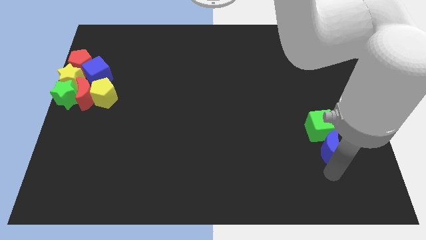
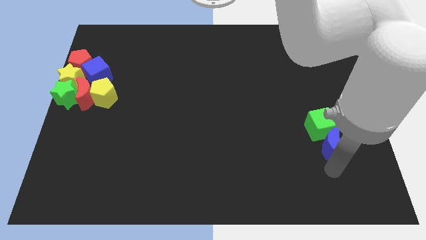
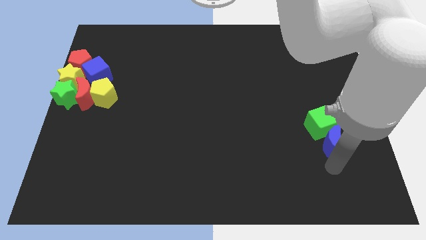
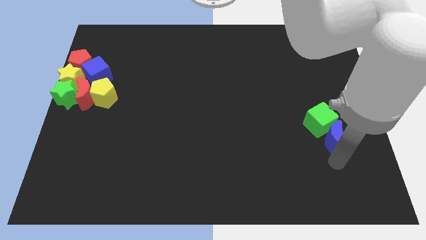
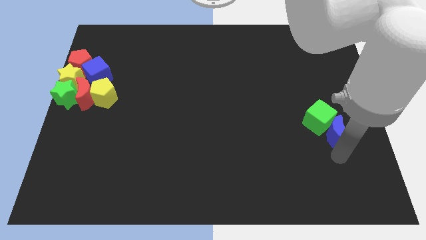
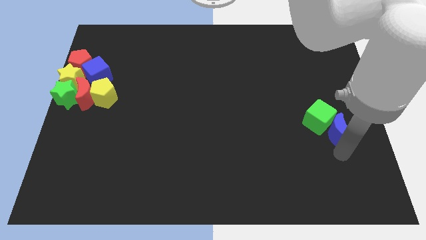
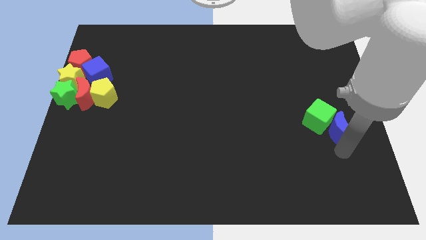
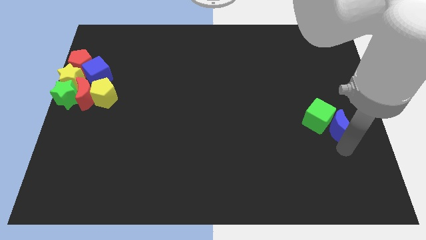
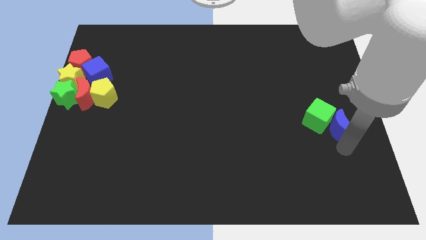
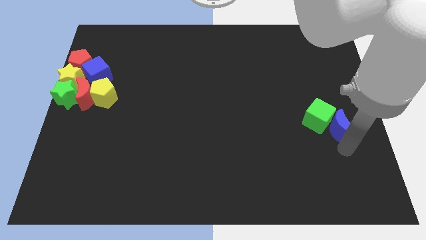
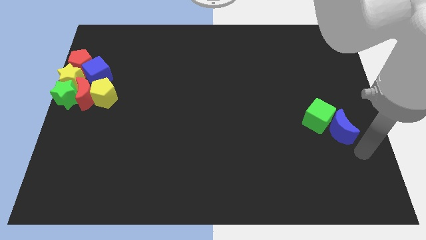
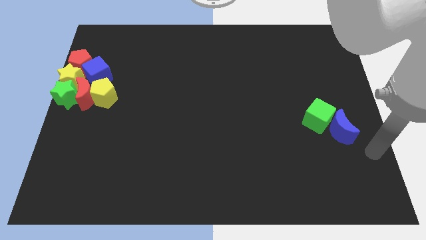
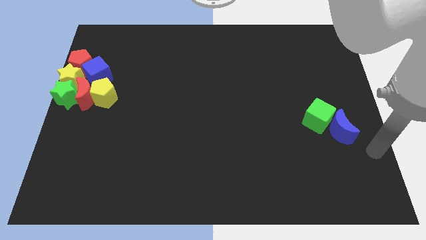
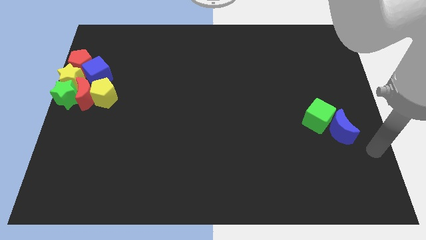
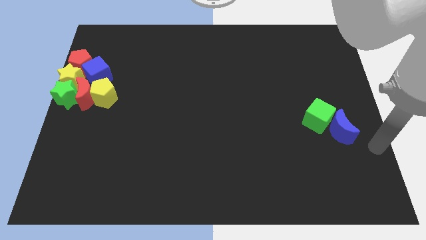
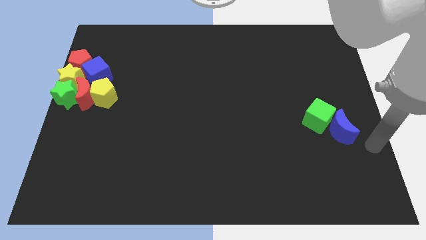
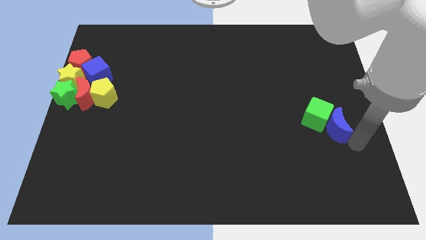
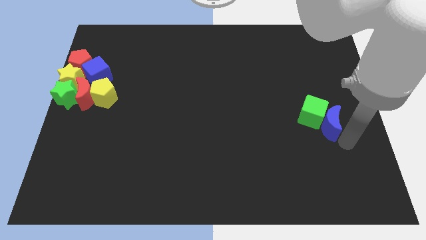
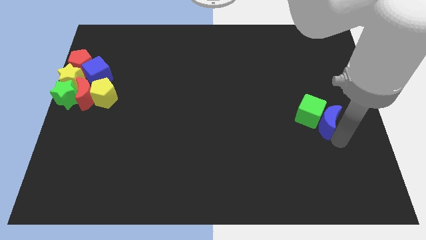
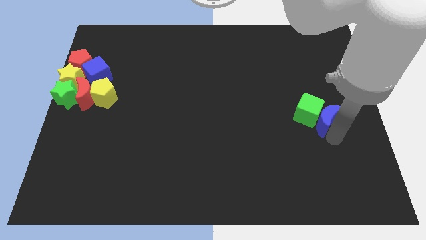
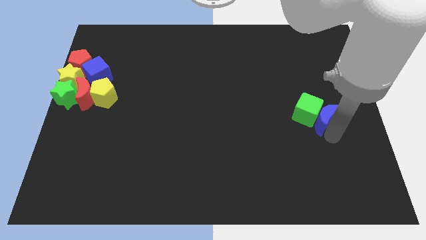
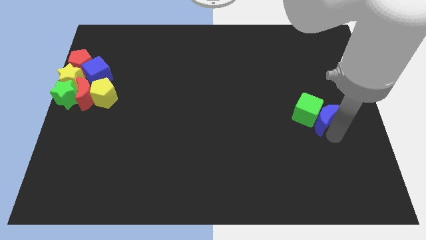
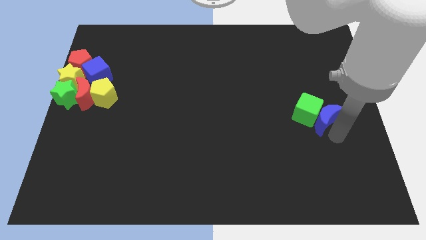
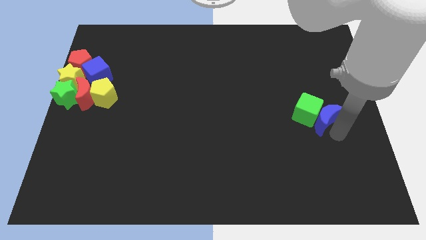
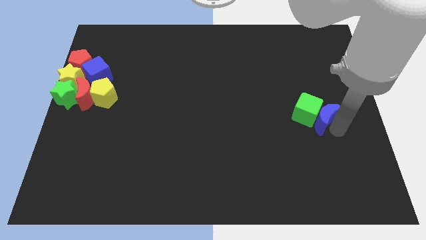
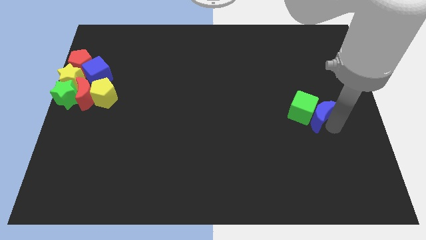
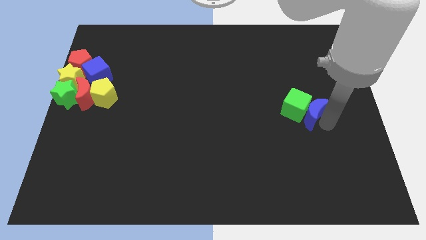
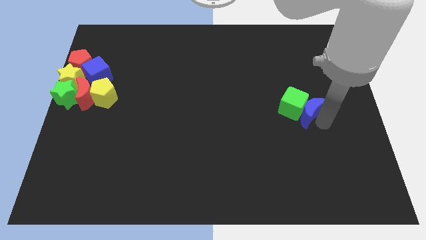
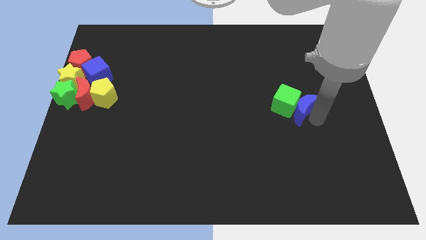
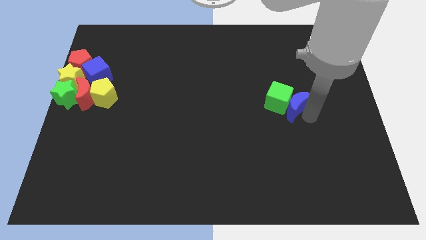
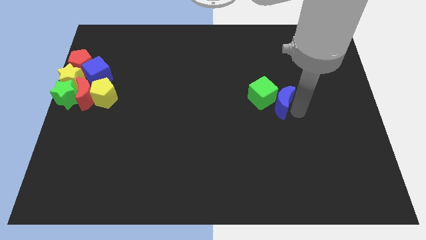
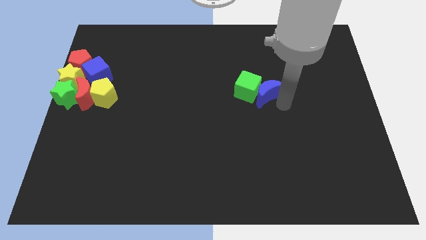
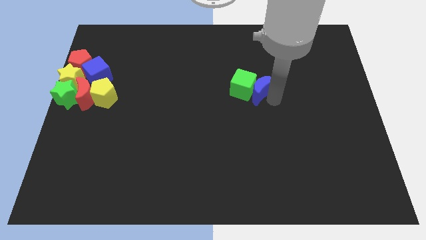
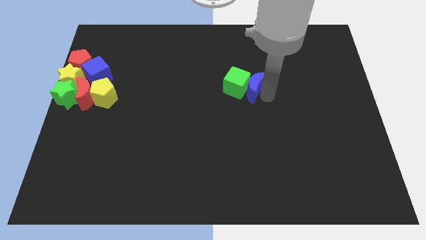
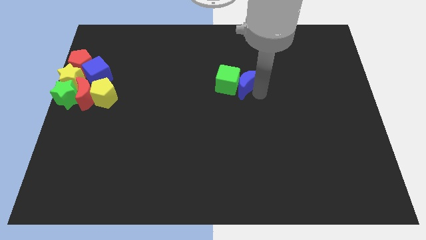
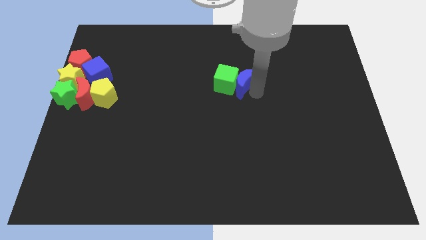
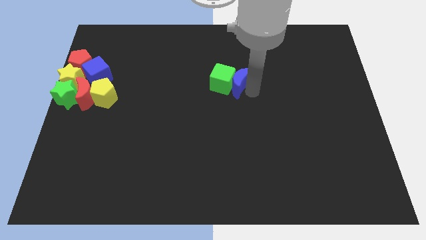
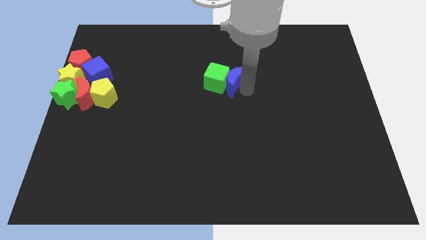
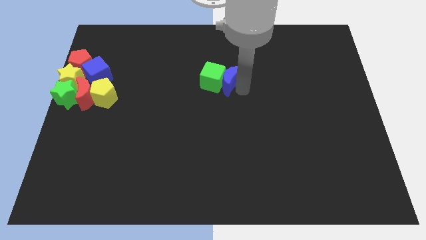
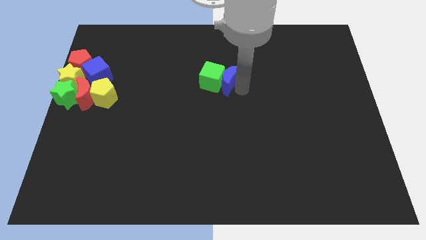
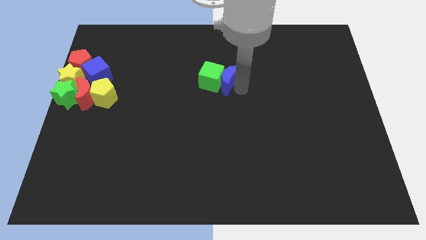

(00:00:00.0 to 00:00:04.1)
push the green cube to the center of the board with blue crescent

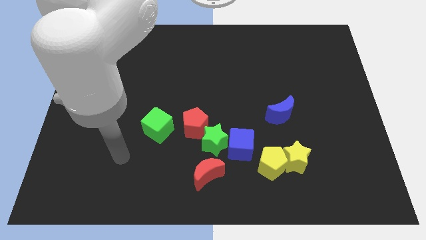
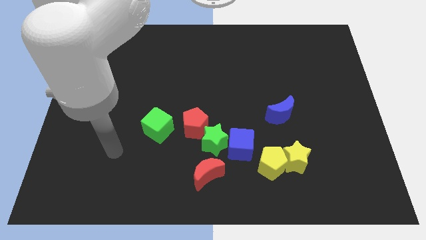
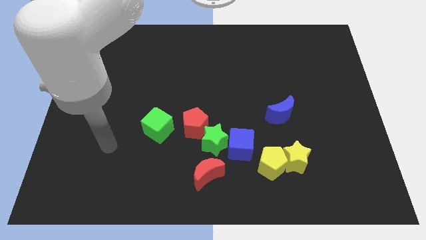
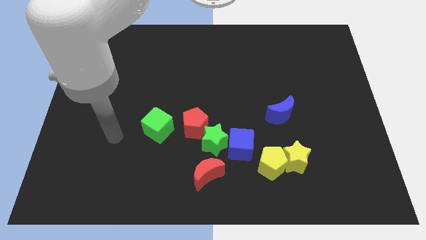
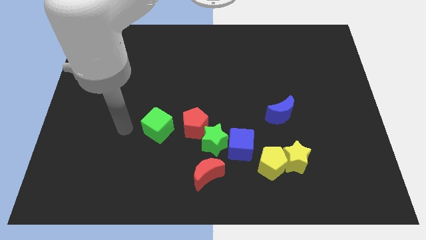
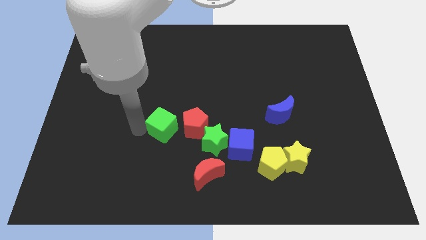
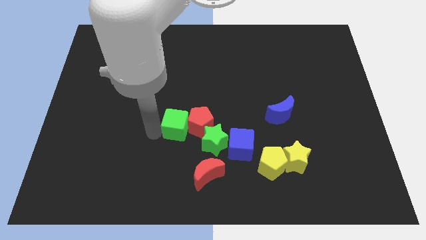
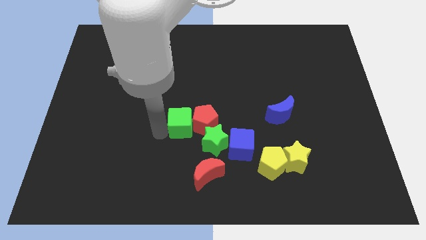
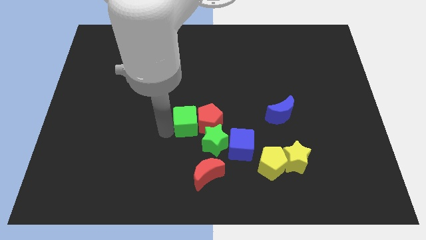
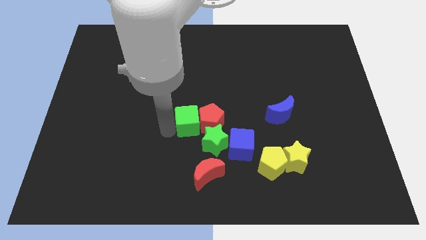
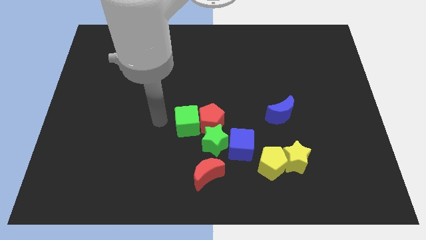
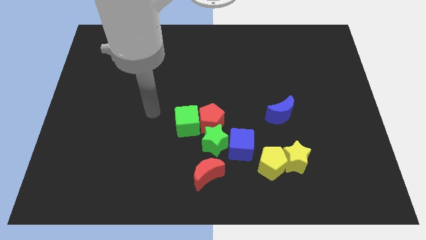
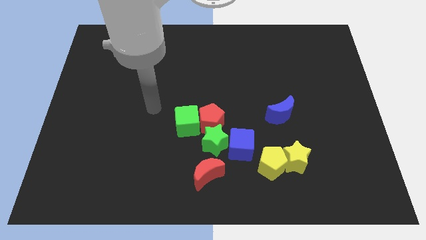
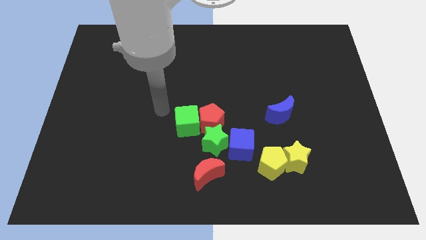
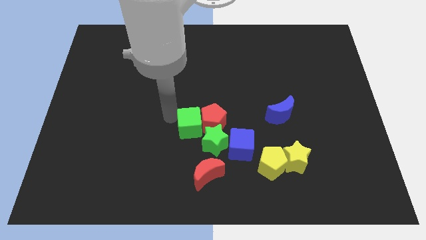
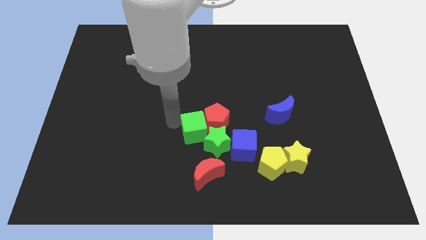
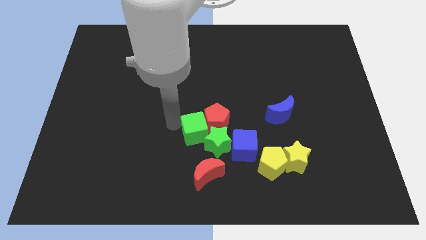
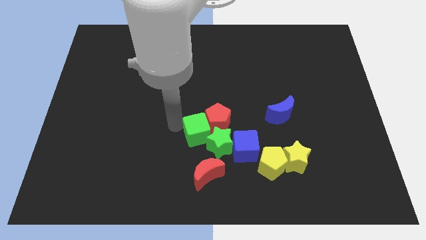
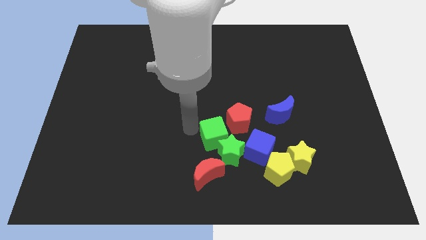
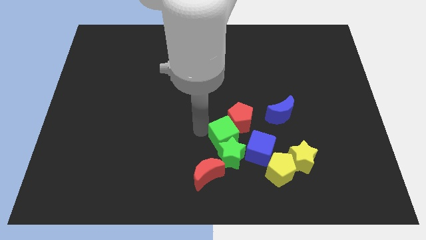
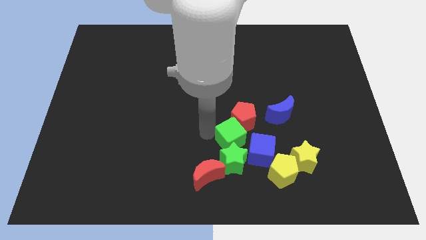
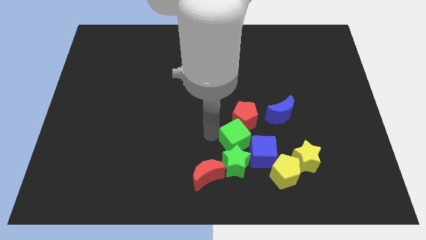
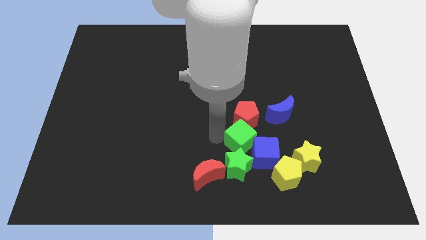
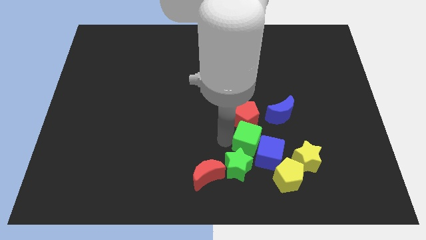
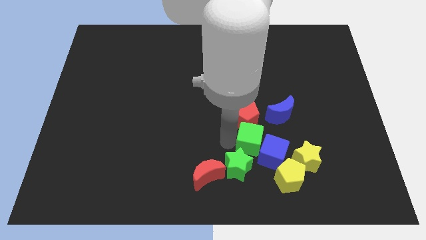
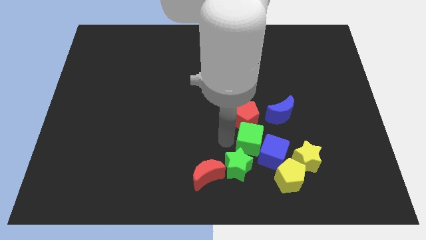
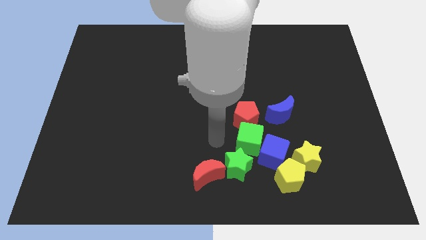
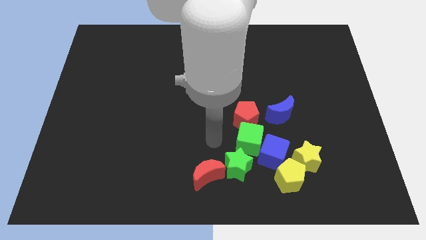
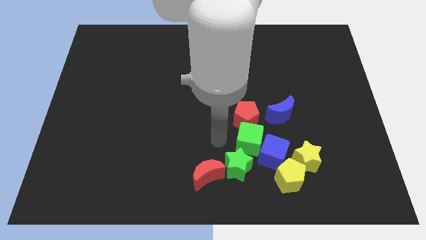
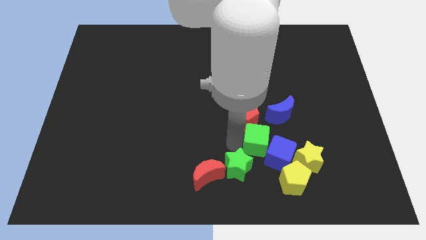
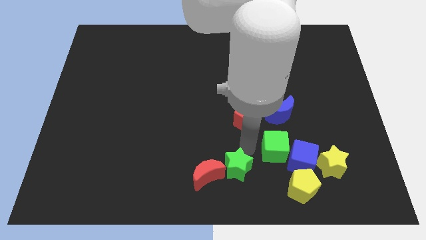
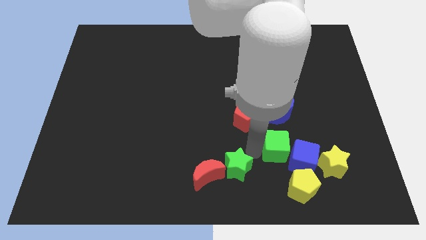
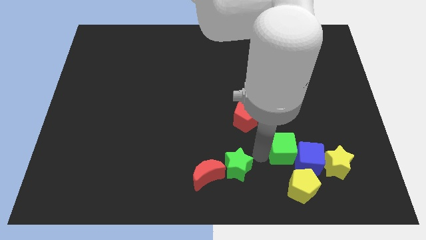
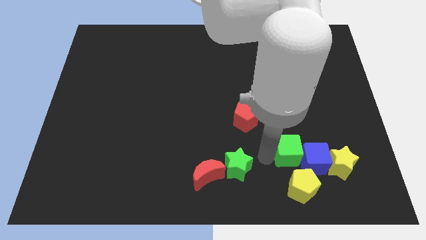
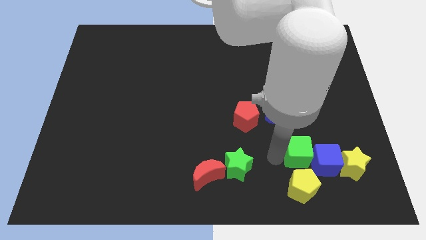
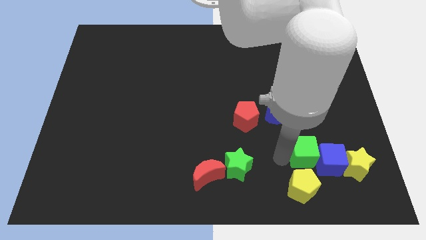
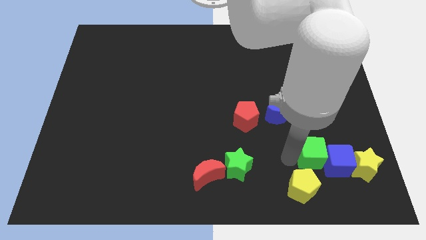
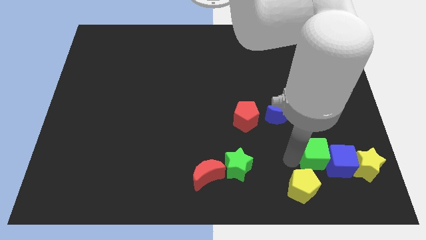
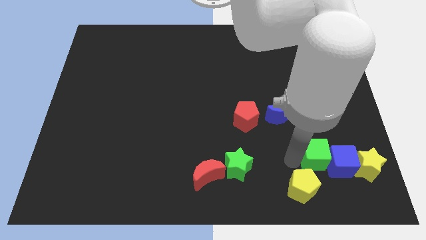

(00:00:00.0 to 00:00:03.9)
push the green cube to the bottom right along with the group of blue cube and yellow star

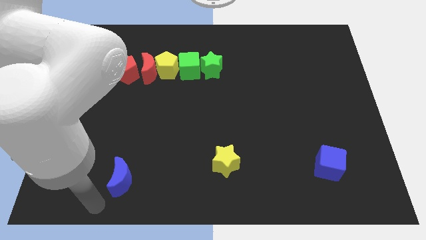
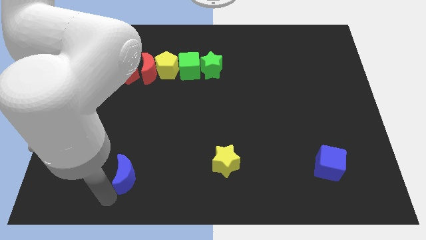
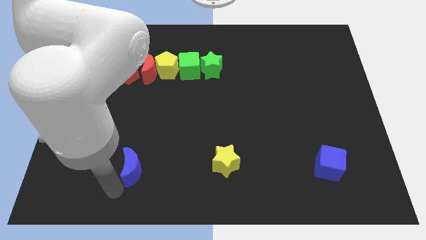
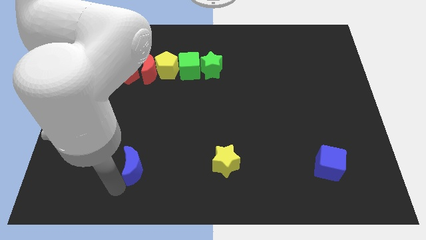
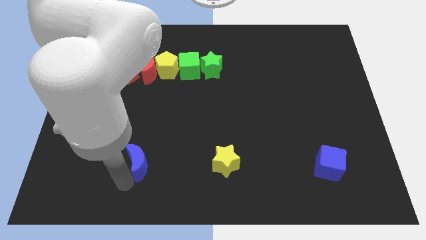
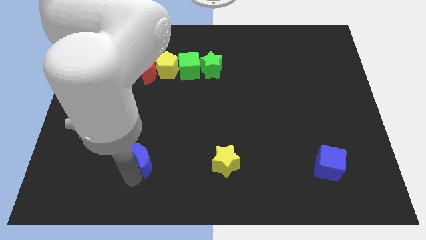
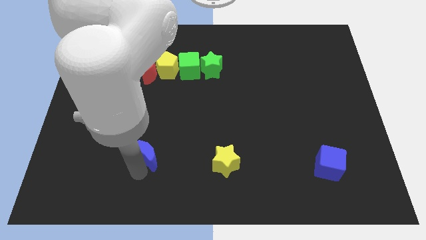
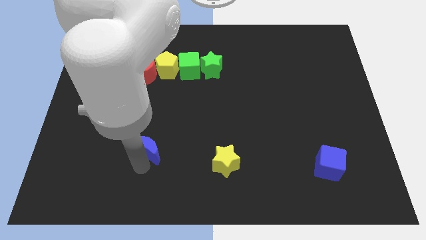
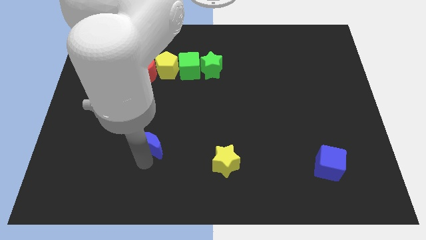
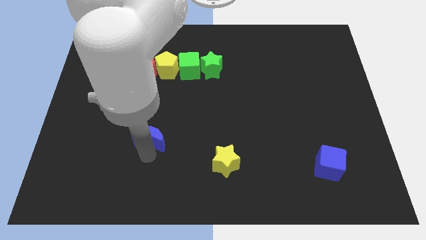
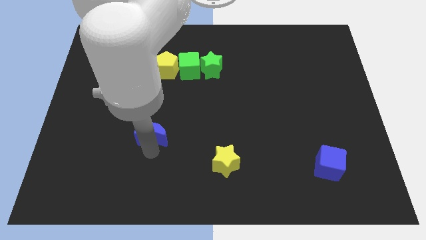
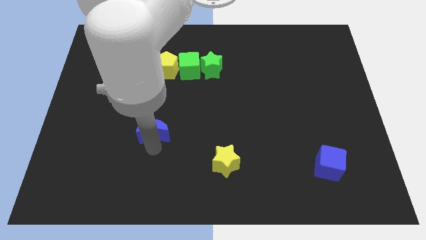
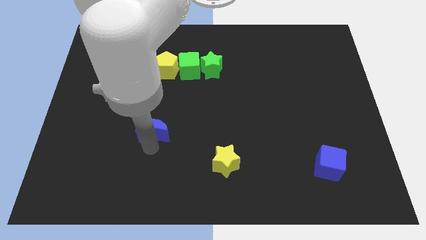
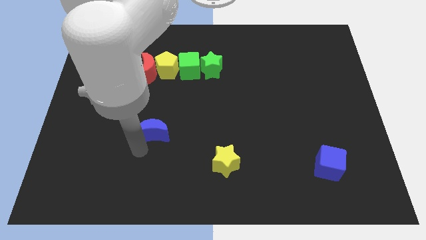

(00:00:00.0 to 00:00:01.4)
drag the blue crescent upwards
